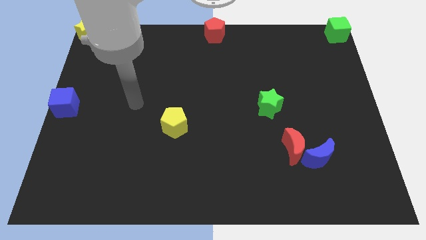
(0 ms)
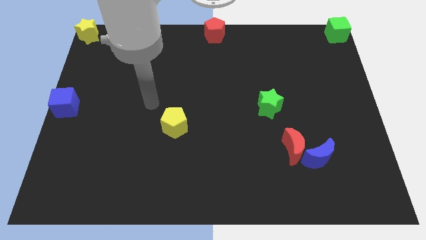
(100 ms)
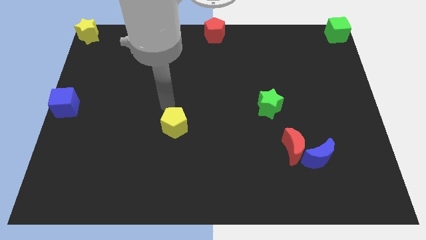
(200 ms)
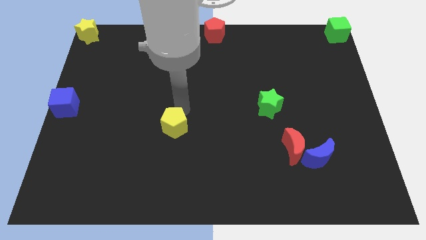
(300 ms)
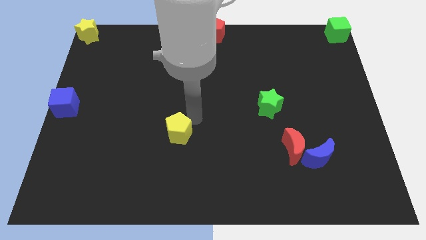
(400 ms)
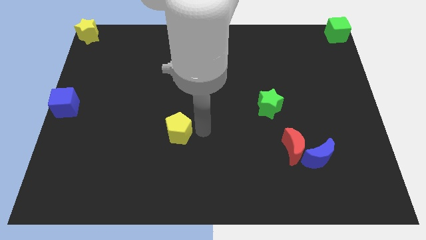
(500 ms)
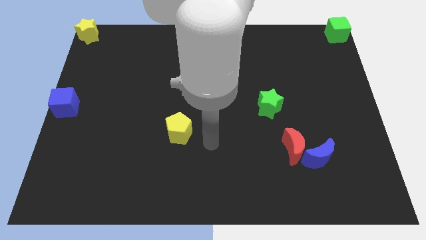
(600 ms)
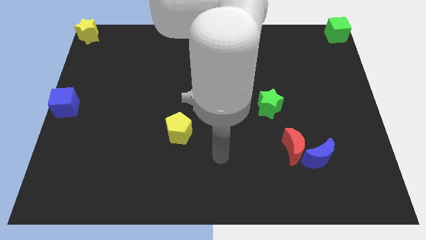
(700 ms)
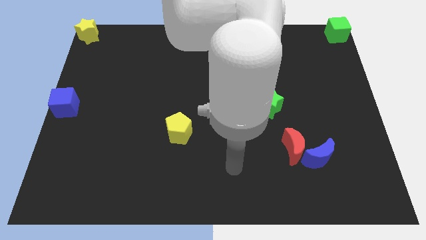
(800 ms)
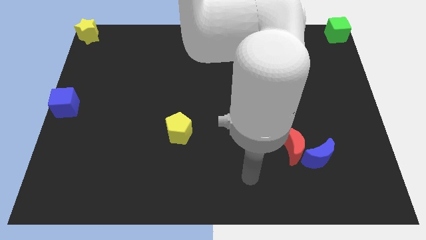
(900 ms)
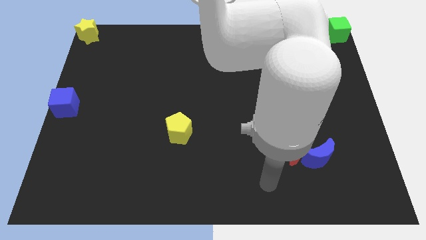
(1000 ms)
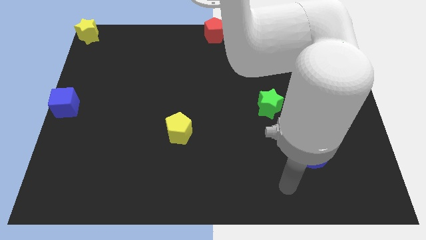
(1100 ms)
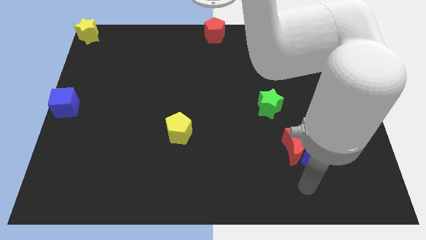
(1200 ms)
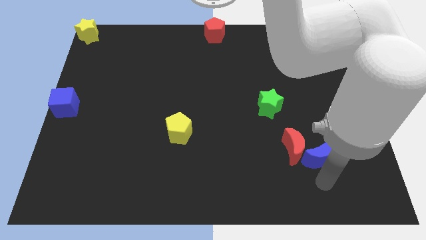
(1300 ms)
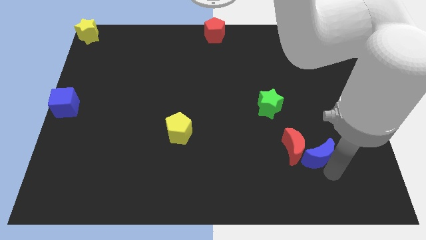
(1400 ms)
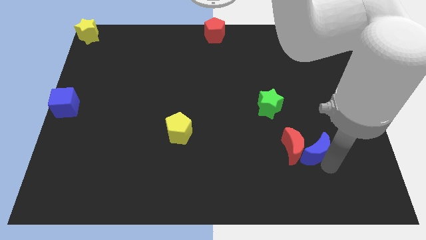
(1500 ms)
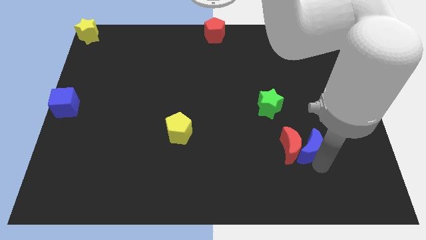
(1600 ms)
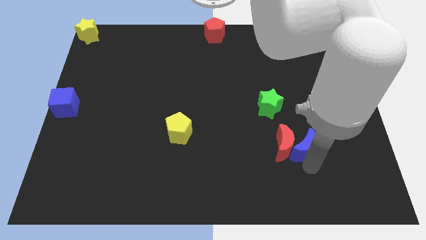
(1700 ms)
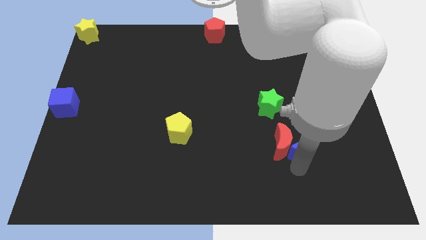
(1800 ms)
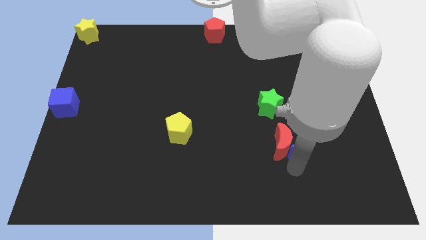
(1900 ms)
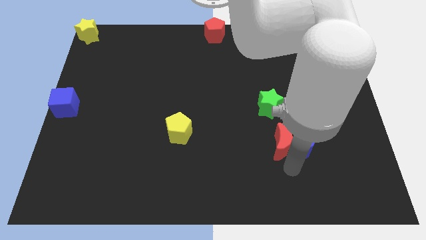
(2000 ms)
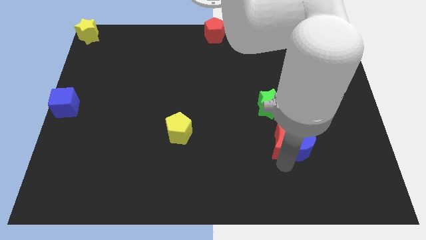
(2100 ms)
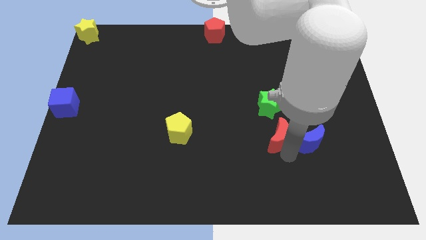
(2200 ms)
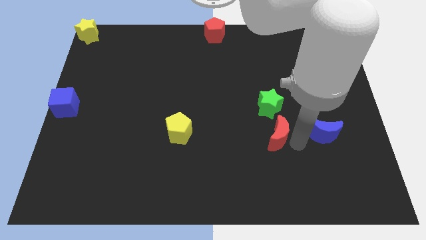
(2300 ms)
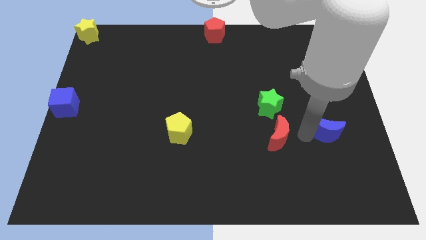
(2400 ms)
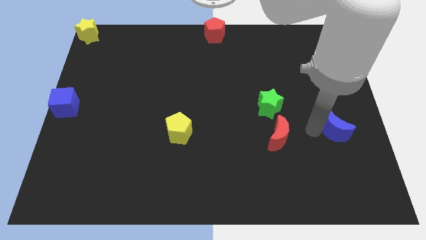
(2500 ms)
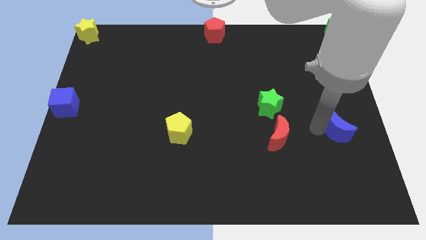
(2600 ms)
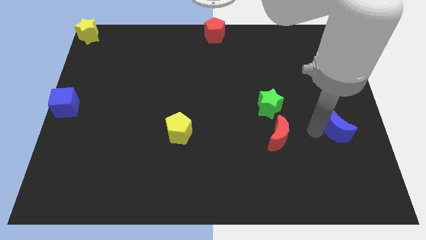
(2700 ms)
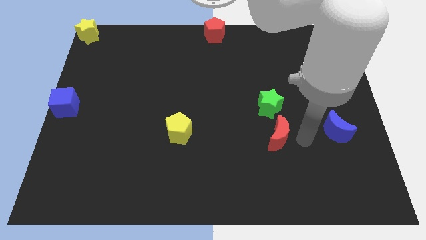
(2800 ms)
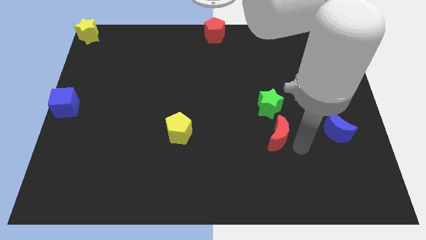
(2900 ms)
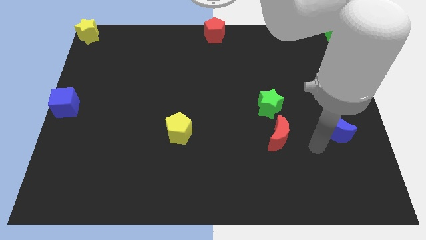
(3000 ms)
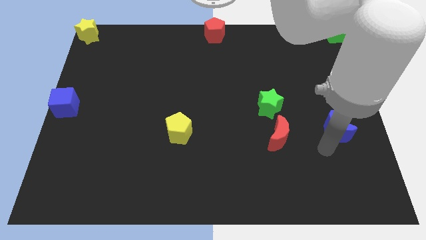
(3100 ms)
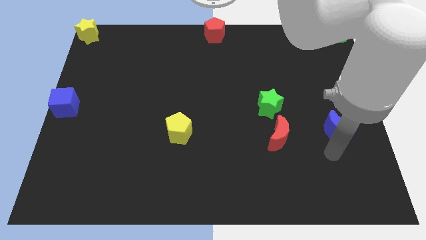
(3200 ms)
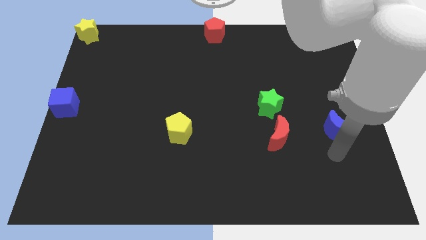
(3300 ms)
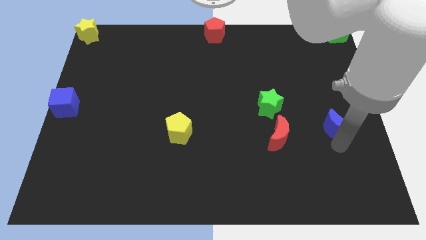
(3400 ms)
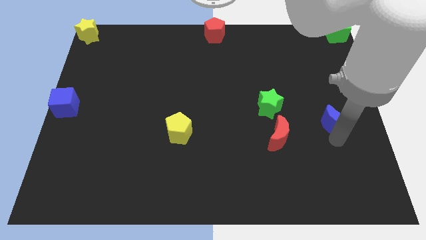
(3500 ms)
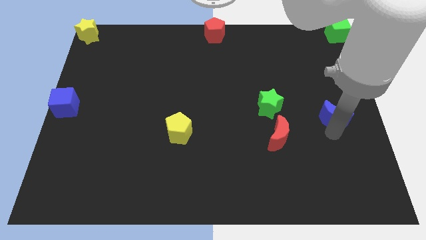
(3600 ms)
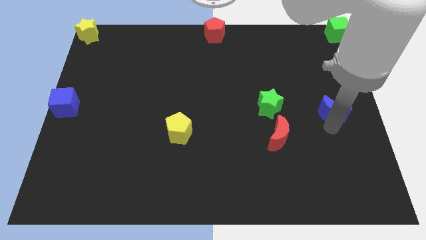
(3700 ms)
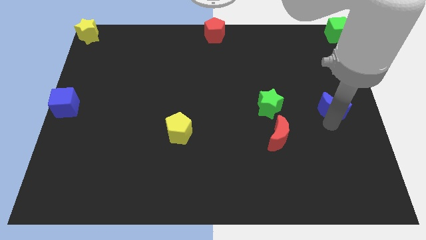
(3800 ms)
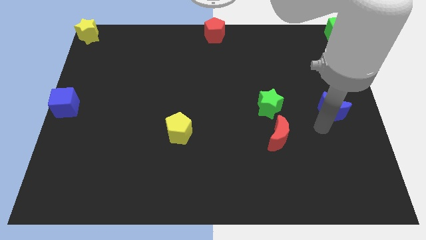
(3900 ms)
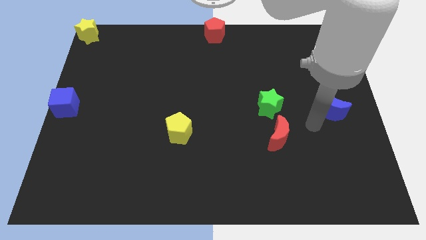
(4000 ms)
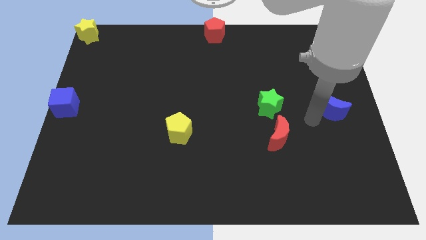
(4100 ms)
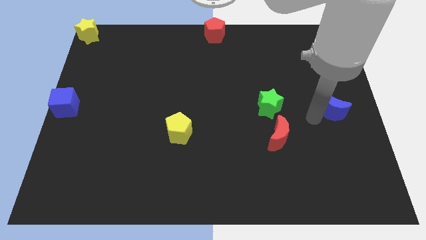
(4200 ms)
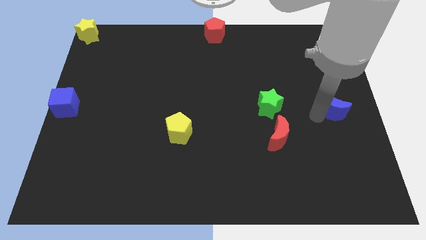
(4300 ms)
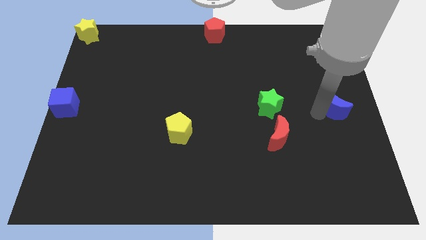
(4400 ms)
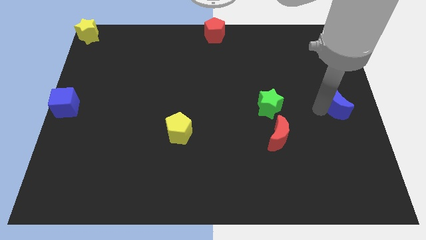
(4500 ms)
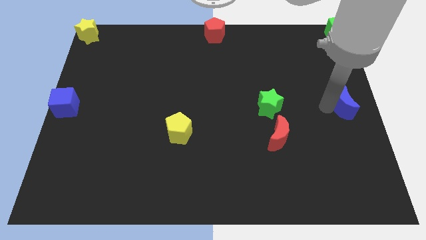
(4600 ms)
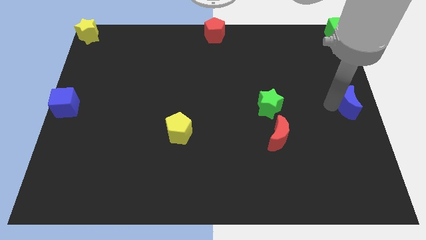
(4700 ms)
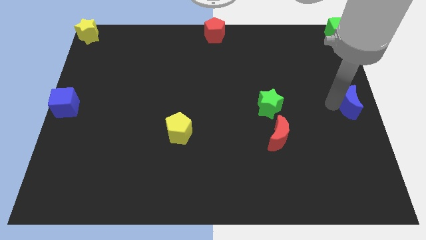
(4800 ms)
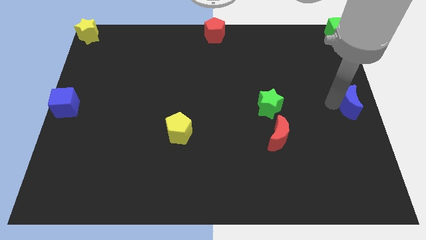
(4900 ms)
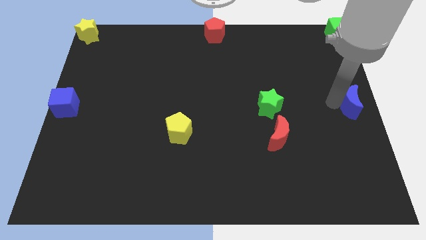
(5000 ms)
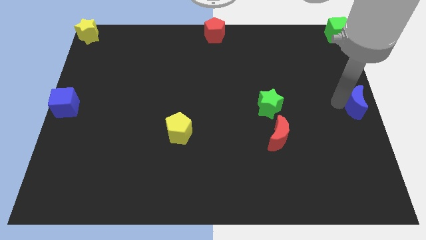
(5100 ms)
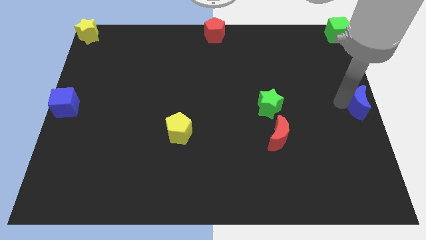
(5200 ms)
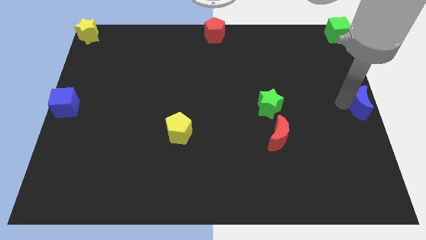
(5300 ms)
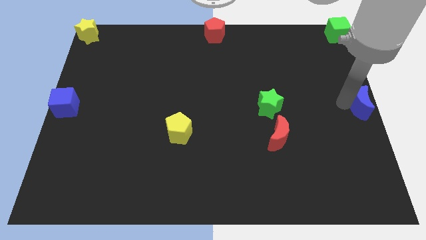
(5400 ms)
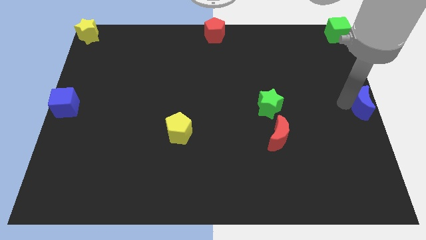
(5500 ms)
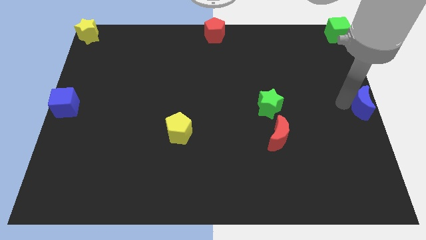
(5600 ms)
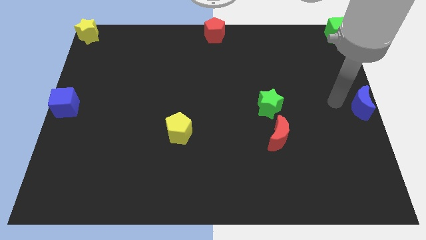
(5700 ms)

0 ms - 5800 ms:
move blue crescent to the right center

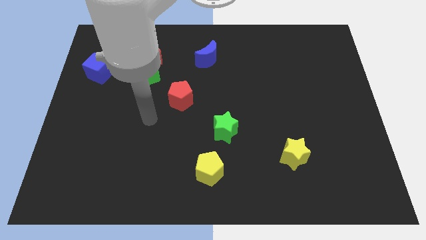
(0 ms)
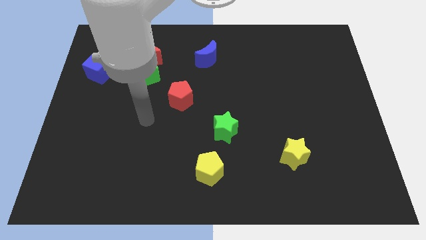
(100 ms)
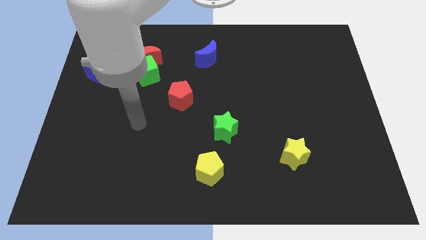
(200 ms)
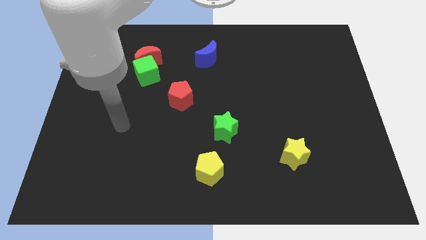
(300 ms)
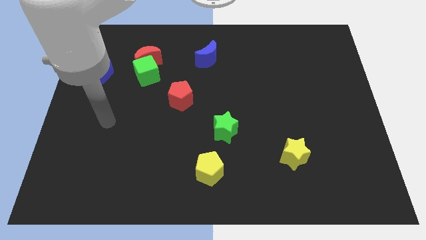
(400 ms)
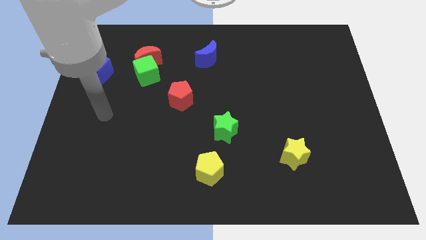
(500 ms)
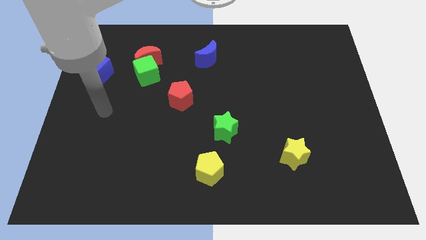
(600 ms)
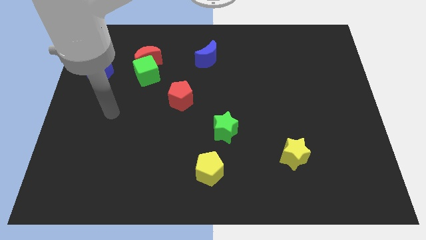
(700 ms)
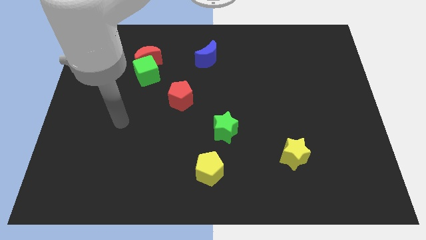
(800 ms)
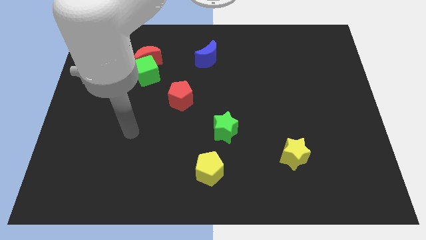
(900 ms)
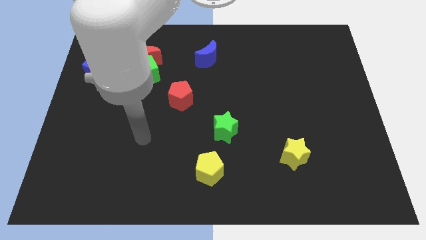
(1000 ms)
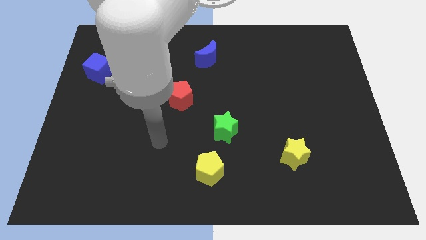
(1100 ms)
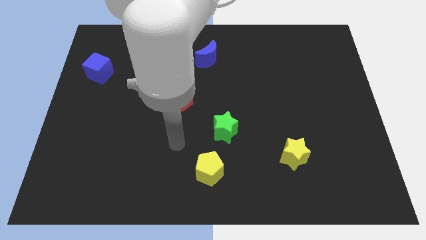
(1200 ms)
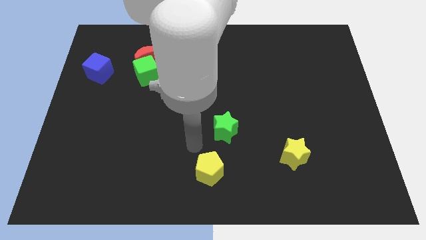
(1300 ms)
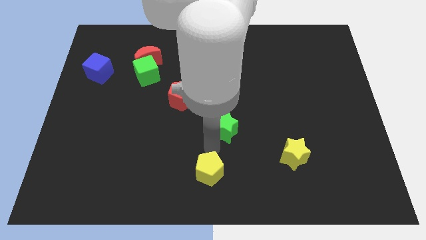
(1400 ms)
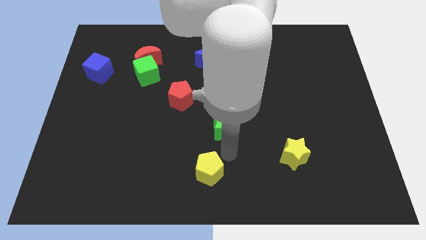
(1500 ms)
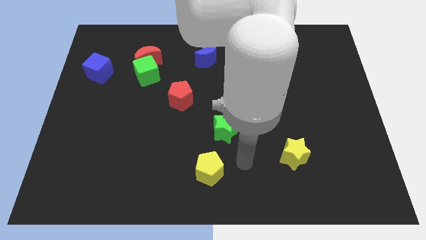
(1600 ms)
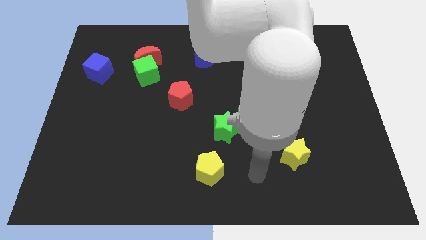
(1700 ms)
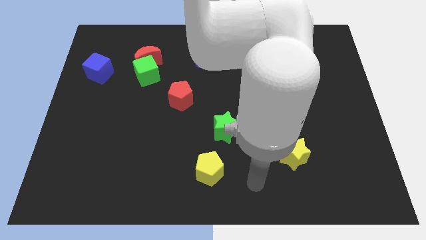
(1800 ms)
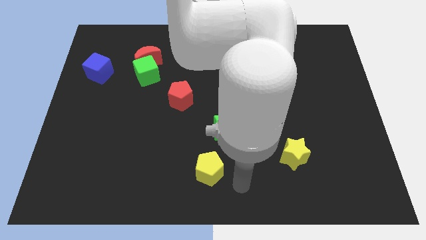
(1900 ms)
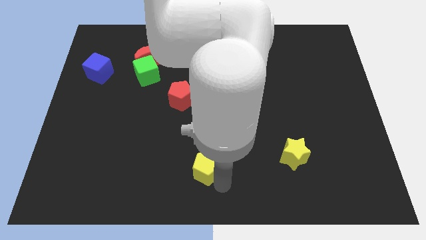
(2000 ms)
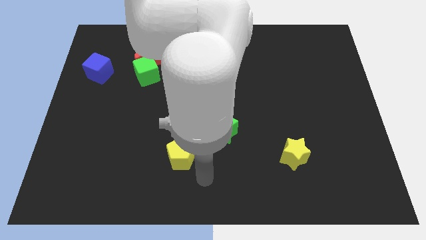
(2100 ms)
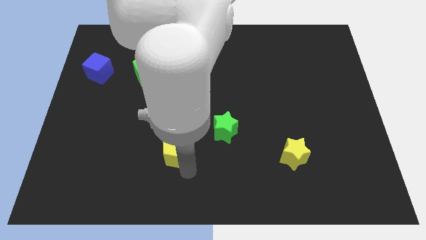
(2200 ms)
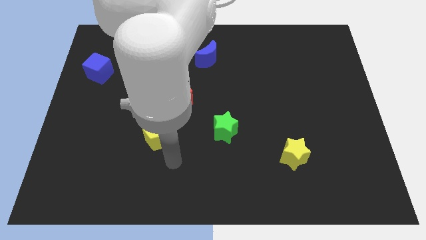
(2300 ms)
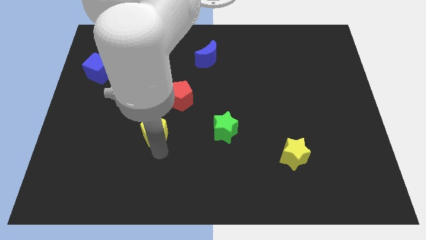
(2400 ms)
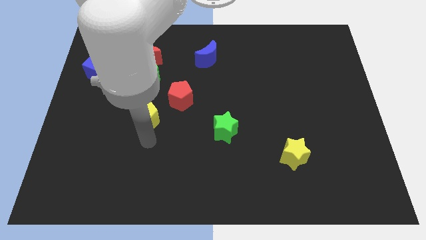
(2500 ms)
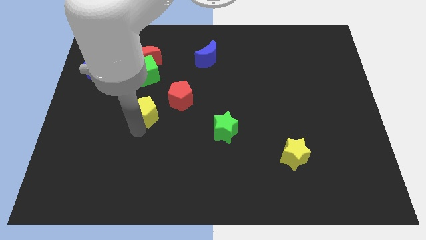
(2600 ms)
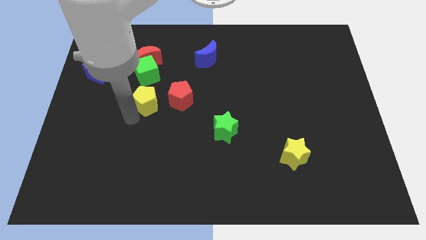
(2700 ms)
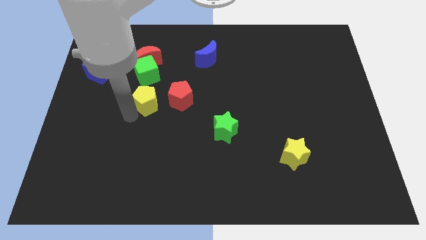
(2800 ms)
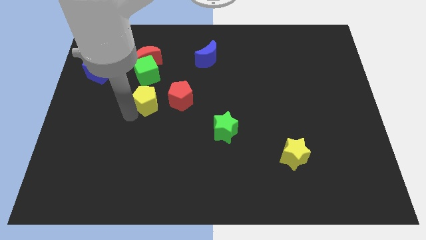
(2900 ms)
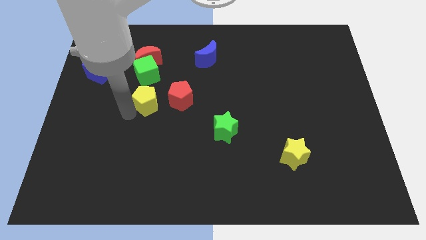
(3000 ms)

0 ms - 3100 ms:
slide yellow pentagon to the left of red pentagon

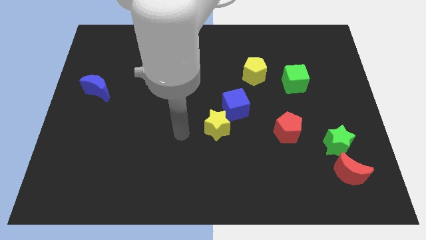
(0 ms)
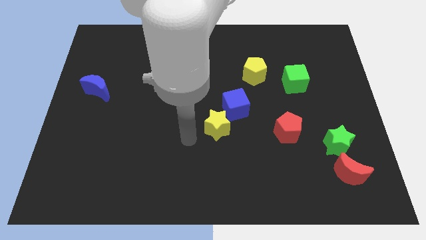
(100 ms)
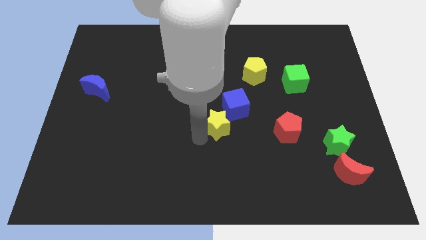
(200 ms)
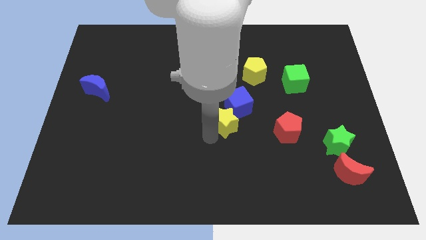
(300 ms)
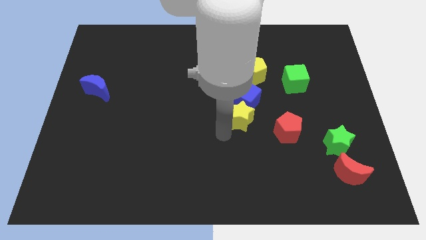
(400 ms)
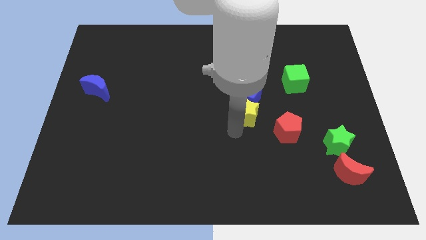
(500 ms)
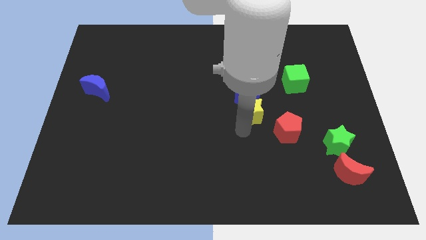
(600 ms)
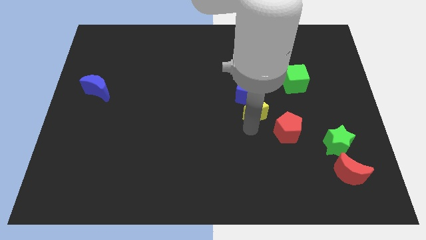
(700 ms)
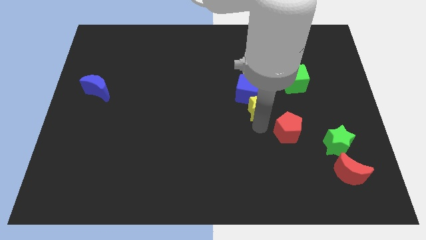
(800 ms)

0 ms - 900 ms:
push blue cube and yellow star towards the yellow pentagon
